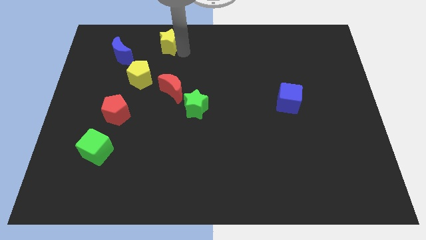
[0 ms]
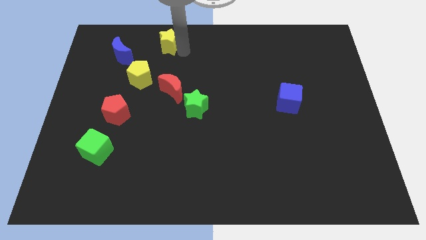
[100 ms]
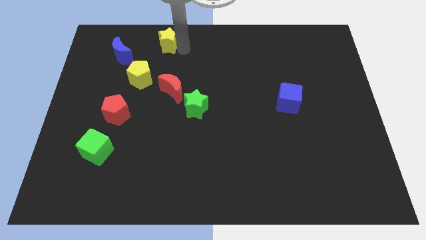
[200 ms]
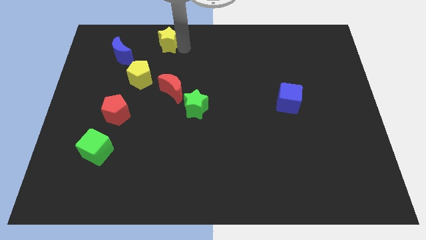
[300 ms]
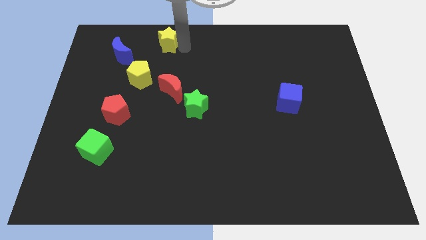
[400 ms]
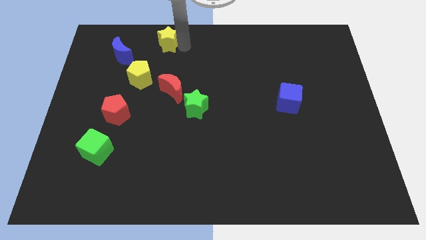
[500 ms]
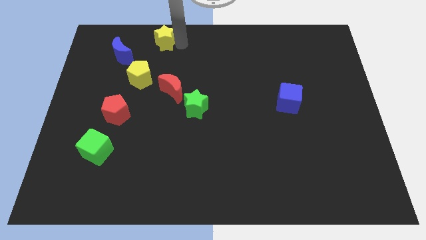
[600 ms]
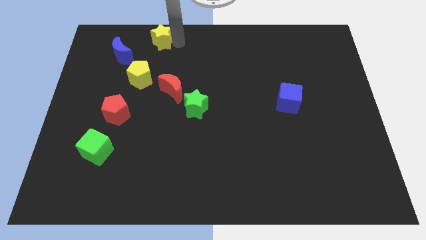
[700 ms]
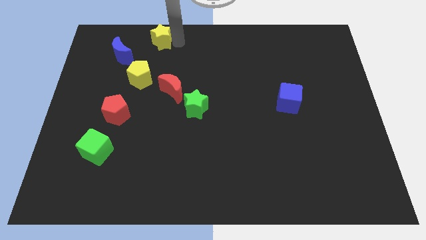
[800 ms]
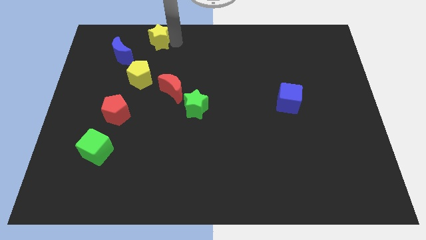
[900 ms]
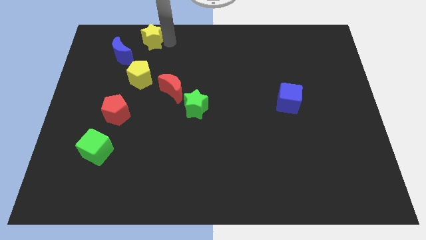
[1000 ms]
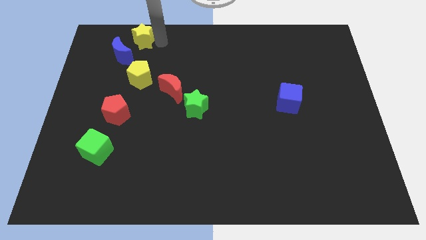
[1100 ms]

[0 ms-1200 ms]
place the yellow star above the blue moon

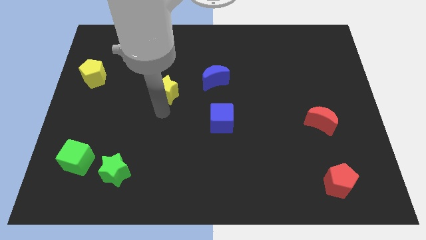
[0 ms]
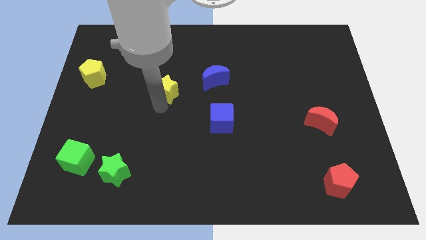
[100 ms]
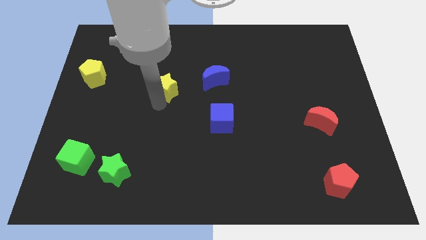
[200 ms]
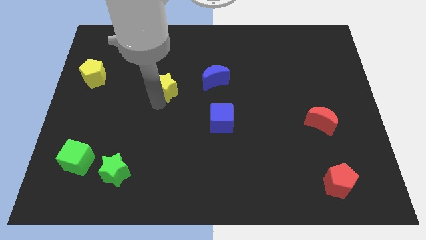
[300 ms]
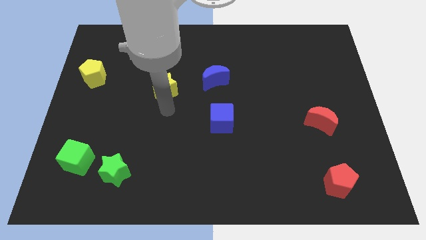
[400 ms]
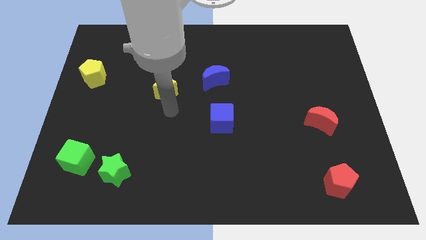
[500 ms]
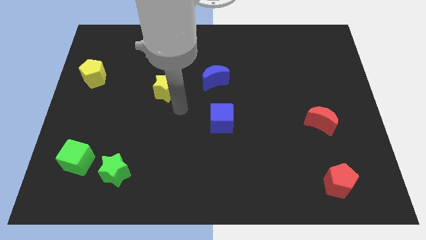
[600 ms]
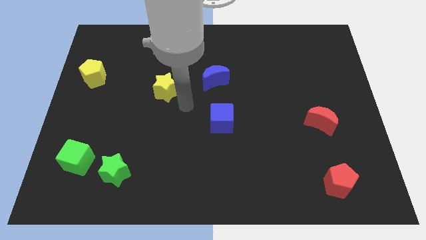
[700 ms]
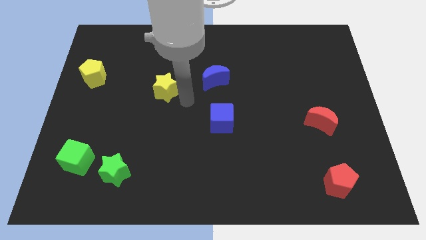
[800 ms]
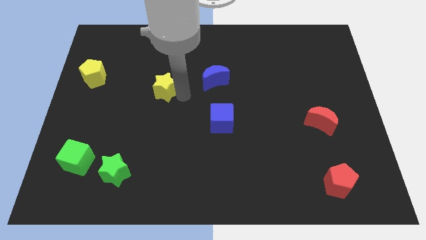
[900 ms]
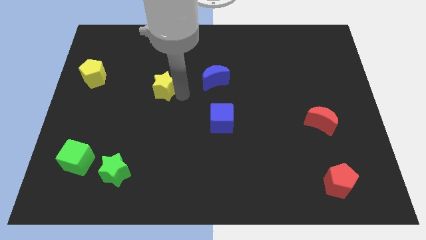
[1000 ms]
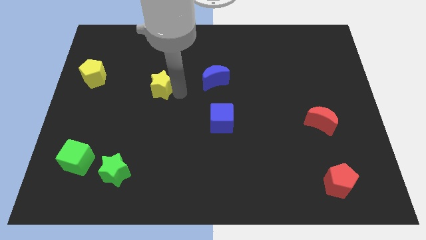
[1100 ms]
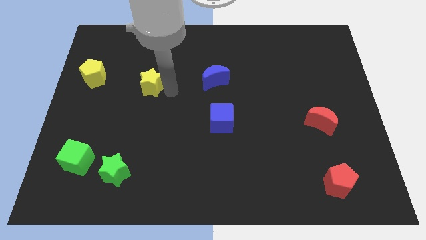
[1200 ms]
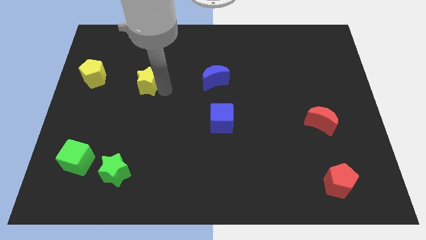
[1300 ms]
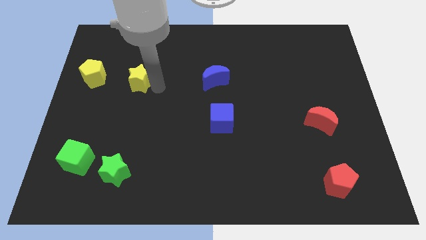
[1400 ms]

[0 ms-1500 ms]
move yellow star towards yellow pentagon

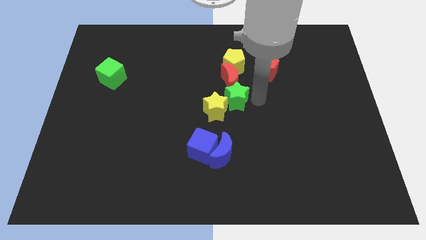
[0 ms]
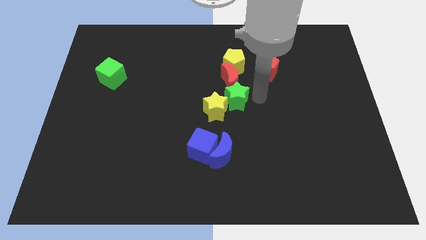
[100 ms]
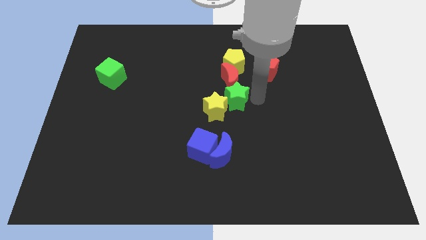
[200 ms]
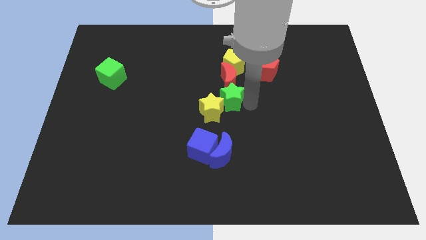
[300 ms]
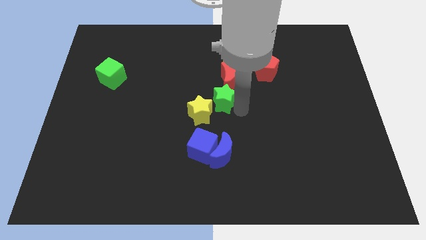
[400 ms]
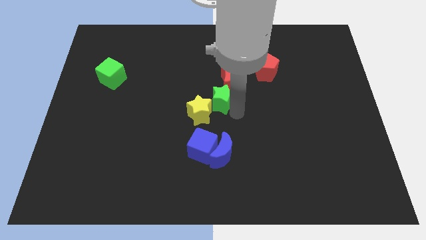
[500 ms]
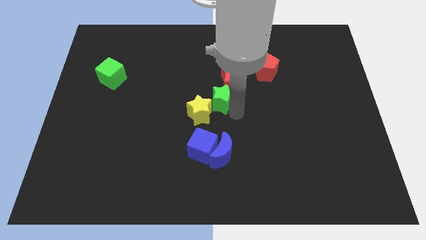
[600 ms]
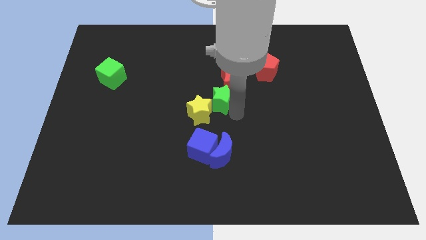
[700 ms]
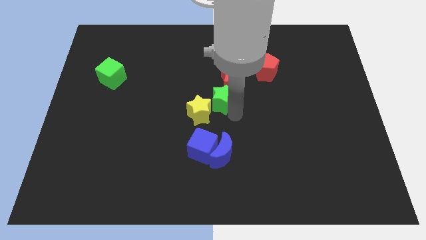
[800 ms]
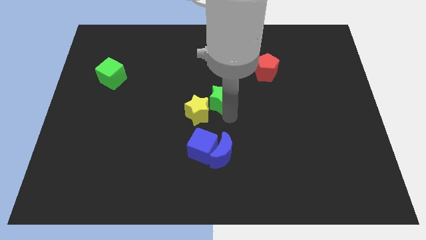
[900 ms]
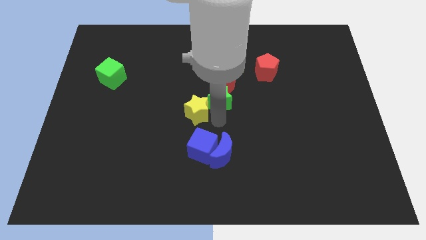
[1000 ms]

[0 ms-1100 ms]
drag the green star vertically below the red moon

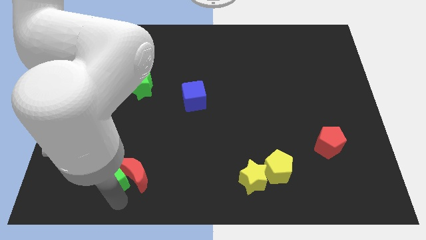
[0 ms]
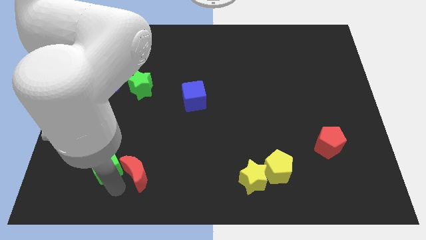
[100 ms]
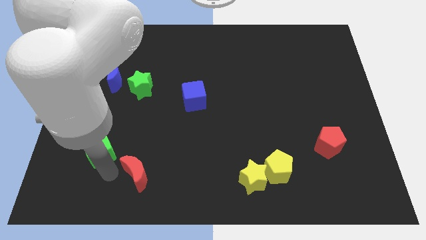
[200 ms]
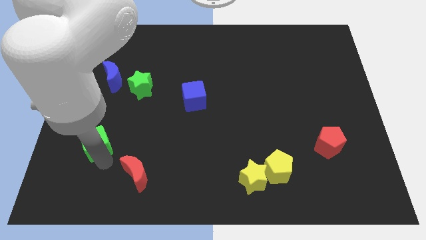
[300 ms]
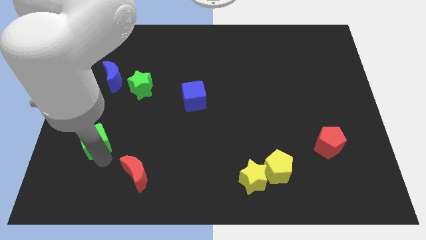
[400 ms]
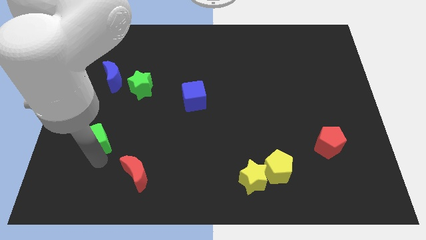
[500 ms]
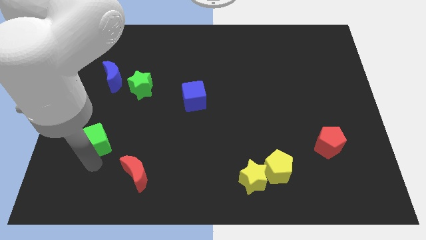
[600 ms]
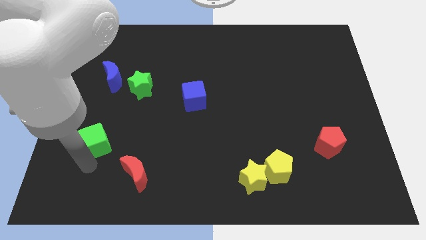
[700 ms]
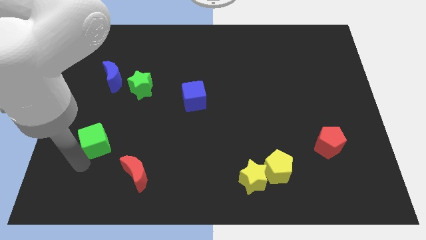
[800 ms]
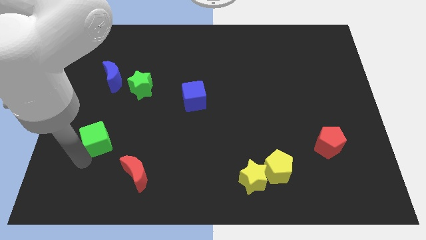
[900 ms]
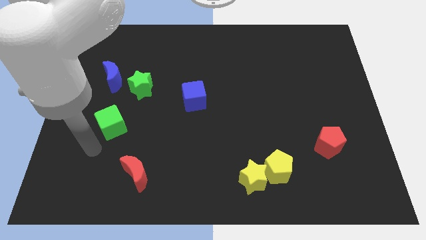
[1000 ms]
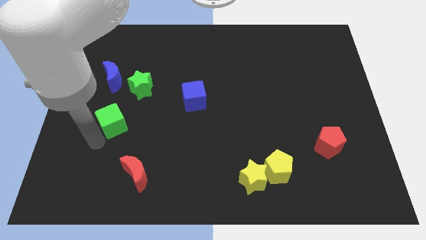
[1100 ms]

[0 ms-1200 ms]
place the green cube diagonally bottom left to the green star

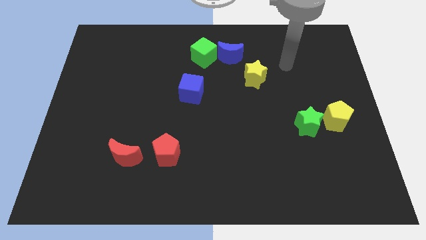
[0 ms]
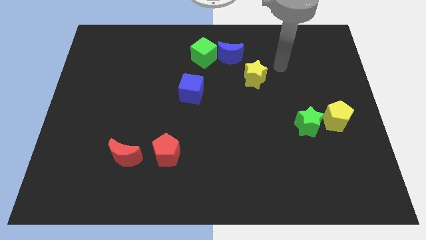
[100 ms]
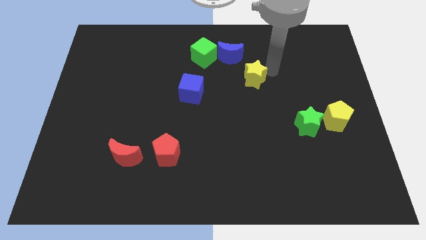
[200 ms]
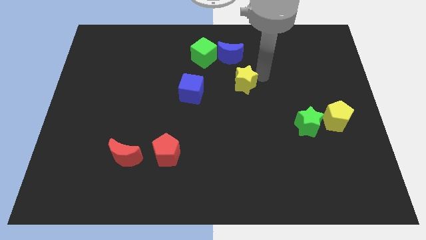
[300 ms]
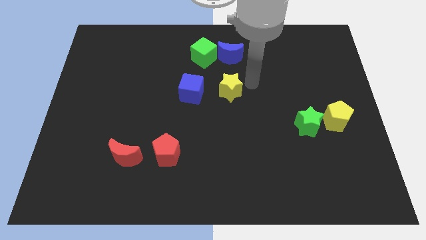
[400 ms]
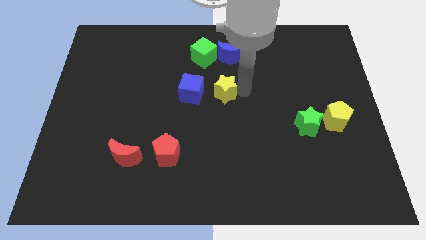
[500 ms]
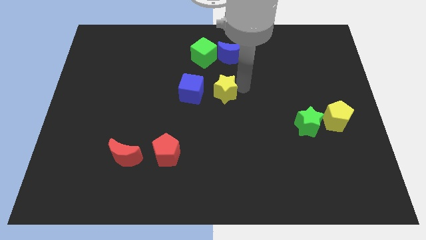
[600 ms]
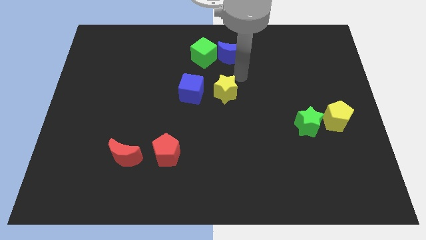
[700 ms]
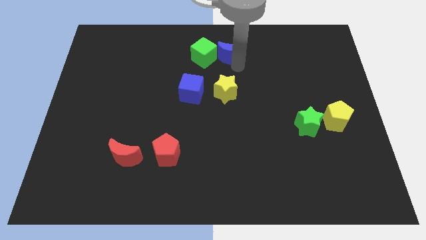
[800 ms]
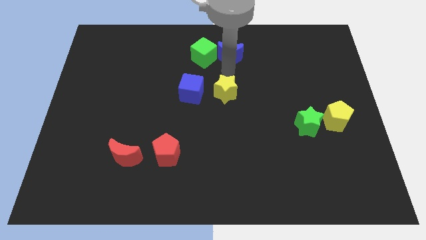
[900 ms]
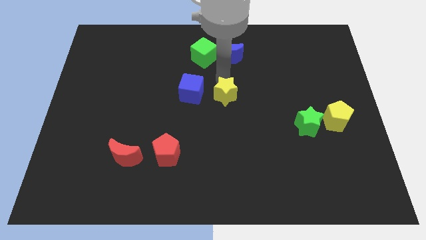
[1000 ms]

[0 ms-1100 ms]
put the yellow star right to the blue cube

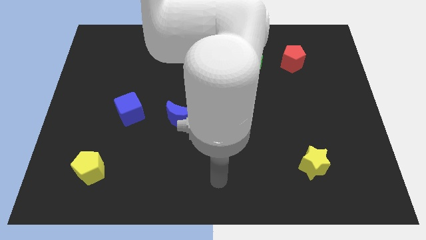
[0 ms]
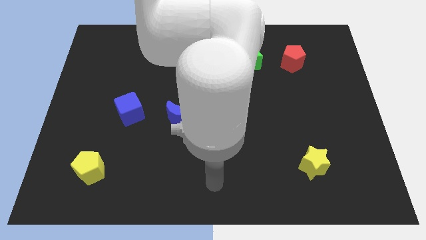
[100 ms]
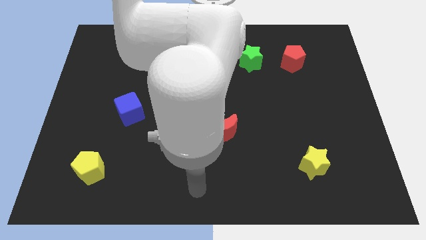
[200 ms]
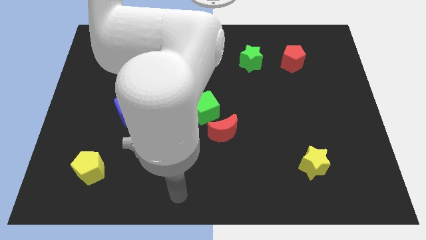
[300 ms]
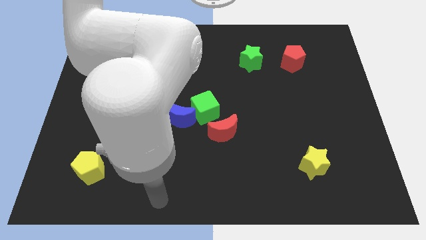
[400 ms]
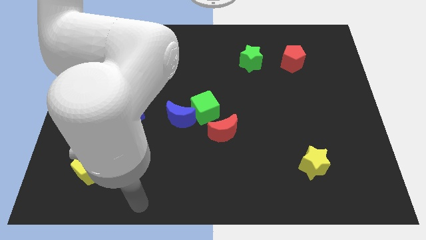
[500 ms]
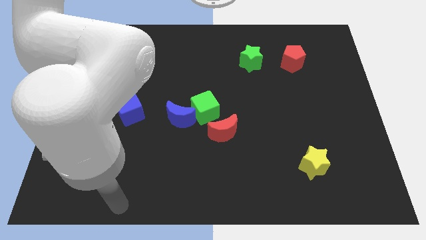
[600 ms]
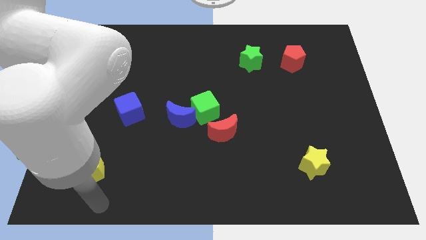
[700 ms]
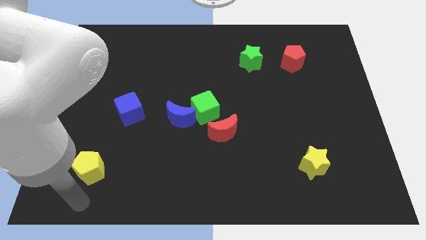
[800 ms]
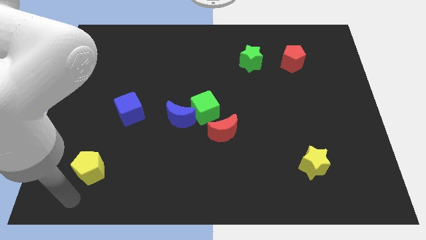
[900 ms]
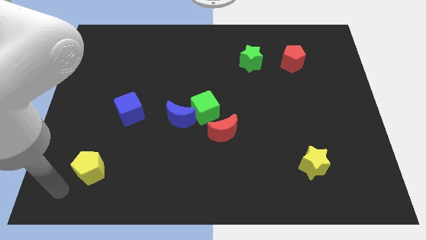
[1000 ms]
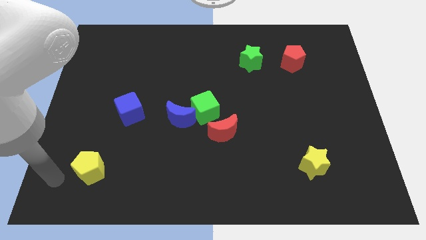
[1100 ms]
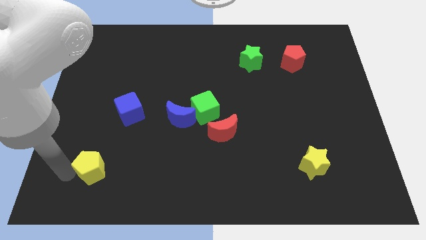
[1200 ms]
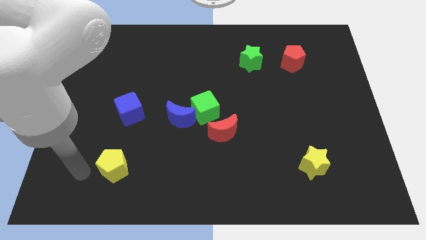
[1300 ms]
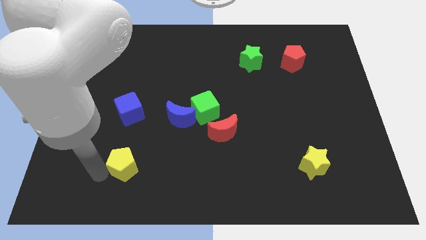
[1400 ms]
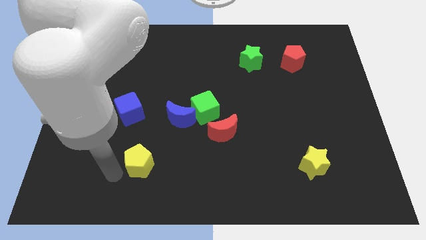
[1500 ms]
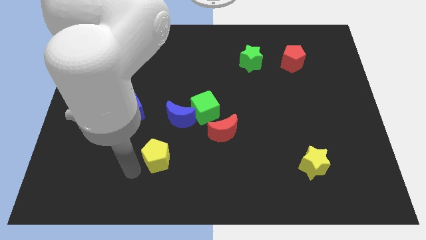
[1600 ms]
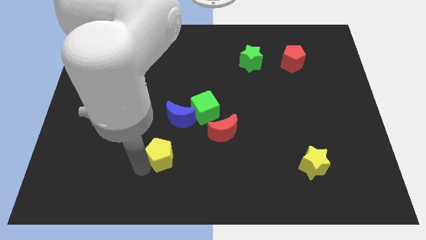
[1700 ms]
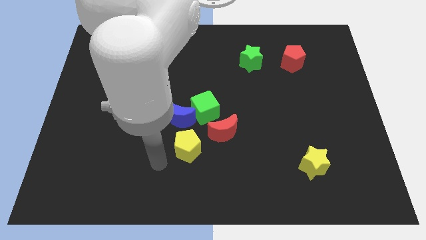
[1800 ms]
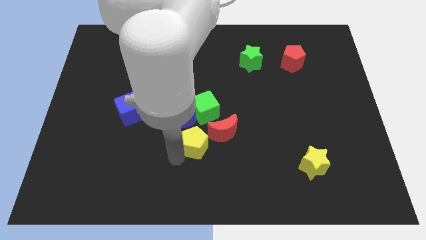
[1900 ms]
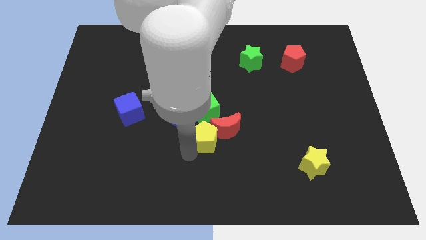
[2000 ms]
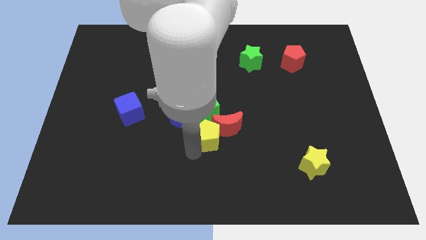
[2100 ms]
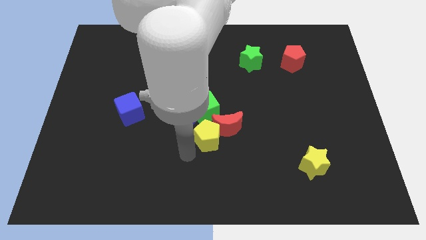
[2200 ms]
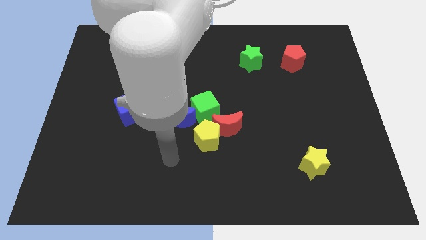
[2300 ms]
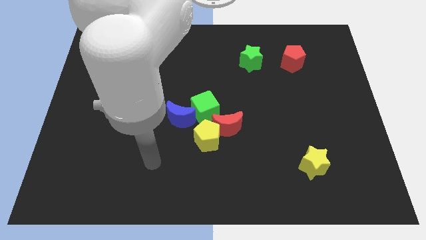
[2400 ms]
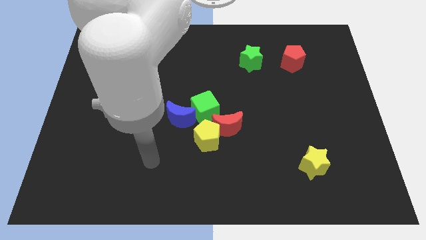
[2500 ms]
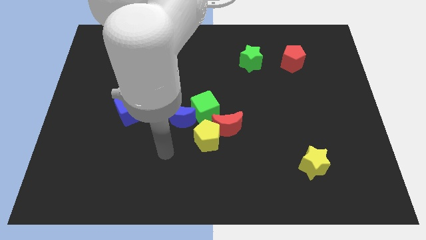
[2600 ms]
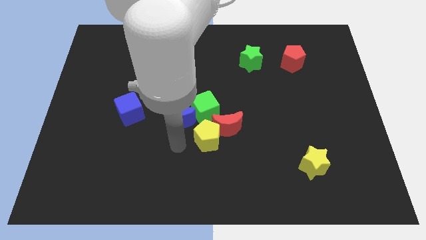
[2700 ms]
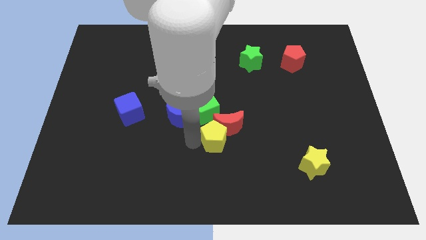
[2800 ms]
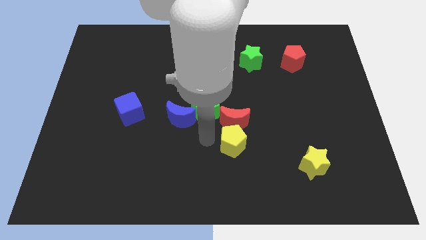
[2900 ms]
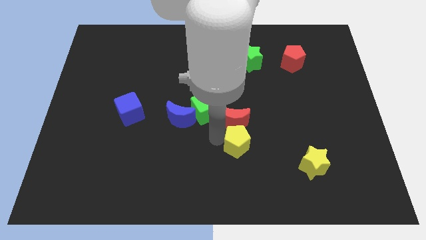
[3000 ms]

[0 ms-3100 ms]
push the yellow pentagon to the bottom of the red crescent
